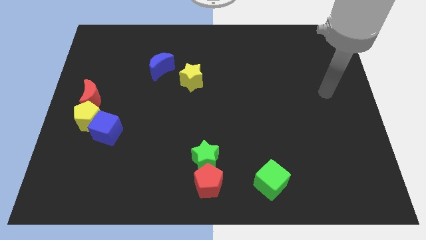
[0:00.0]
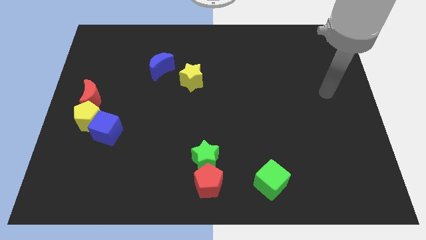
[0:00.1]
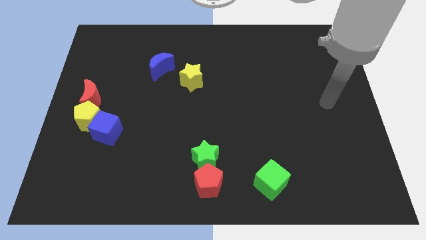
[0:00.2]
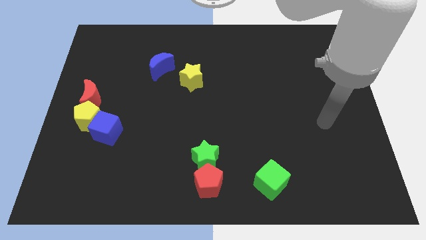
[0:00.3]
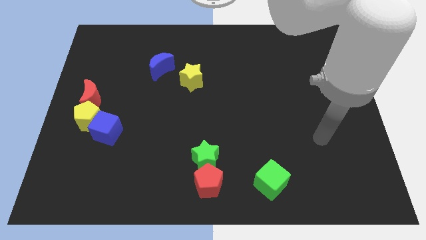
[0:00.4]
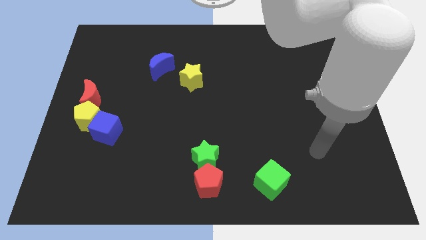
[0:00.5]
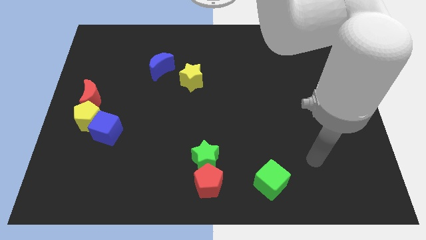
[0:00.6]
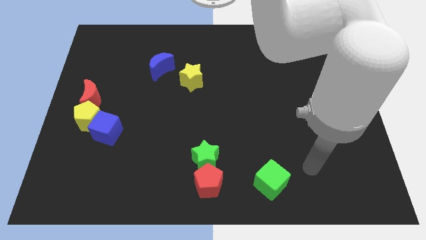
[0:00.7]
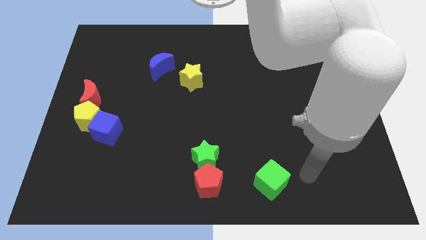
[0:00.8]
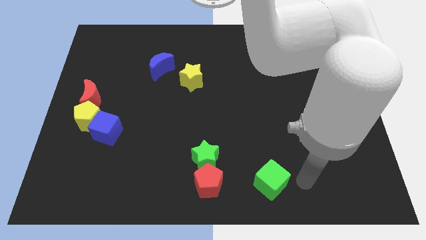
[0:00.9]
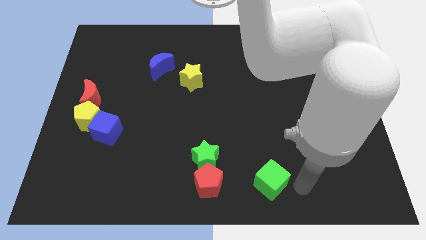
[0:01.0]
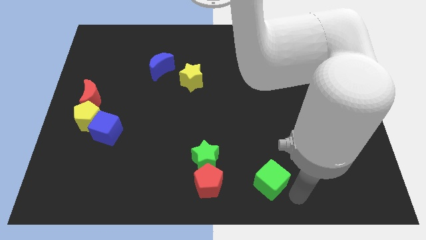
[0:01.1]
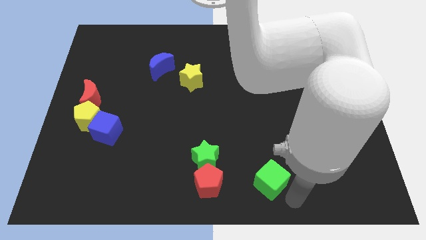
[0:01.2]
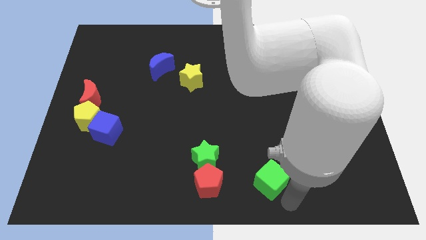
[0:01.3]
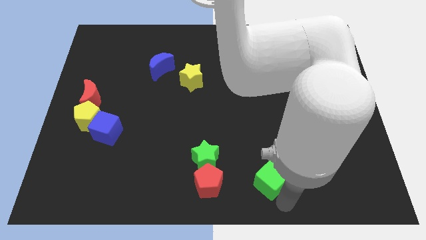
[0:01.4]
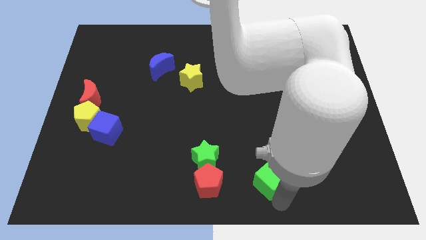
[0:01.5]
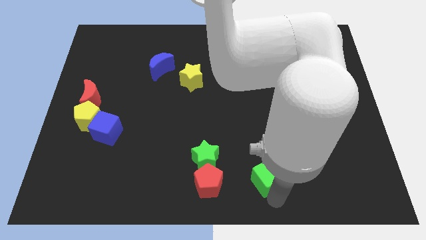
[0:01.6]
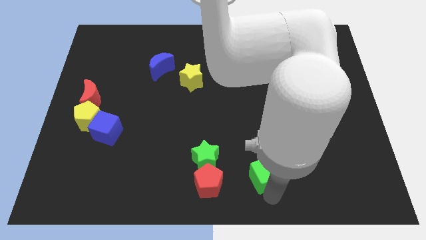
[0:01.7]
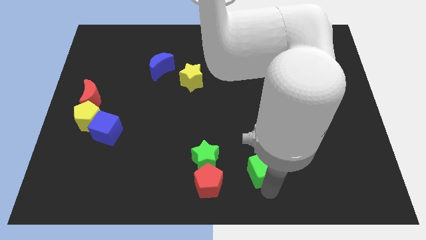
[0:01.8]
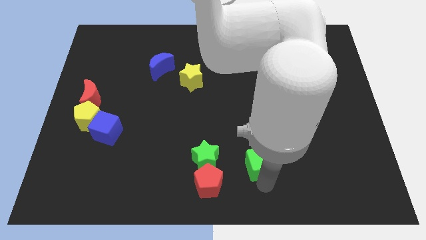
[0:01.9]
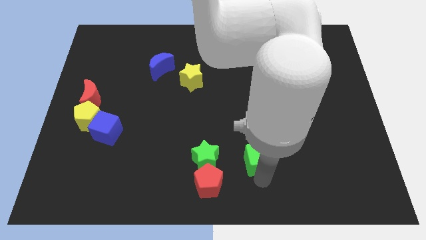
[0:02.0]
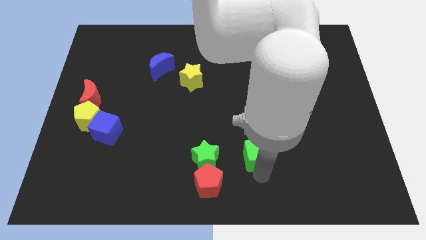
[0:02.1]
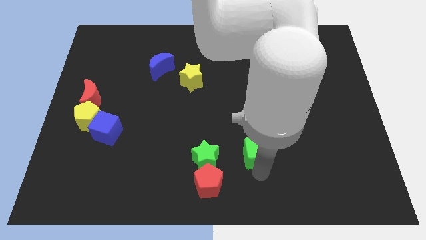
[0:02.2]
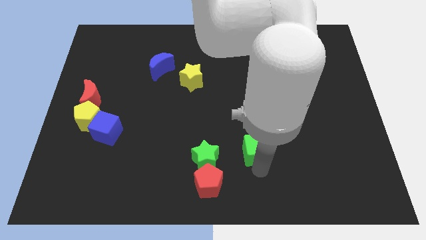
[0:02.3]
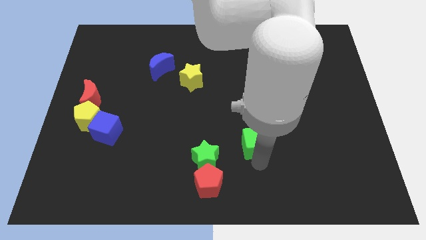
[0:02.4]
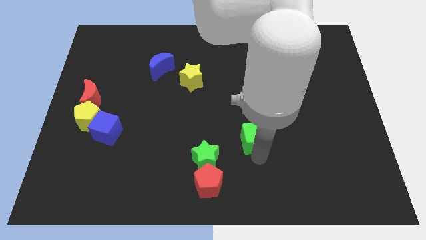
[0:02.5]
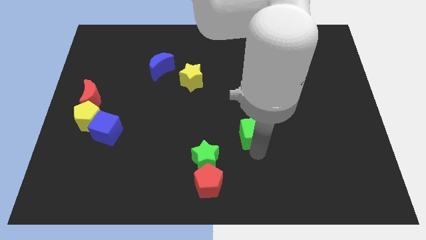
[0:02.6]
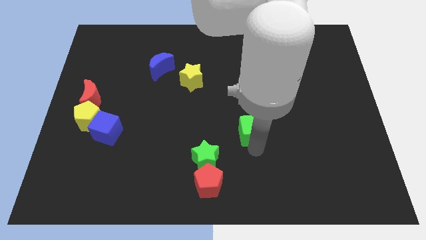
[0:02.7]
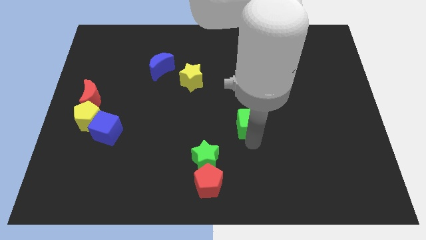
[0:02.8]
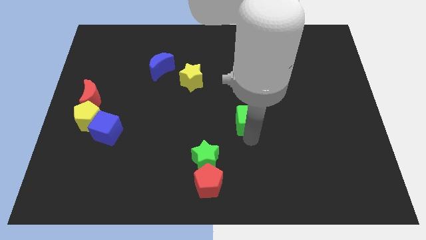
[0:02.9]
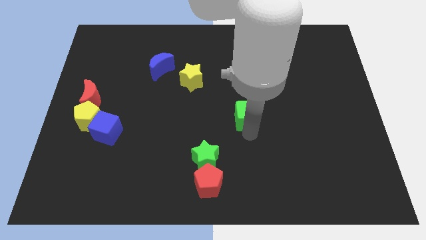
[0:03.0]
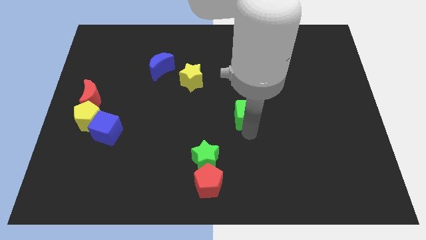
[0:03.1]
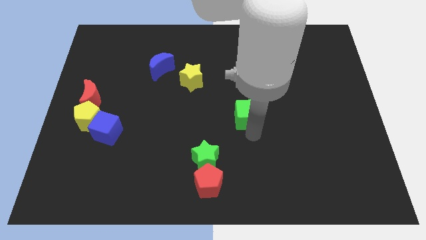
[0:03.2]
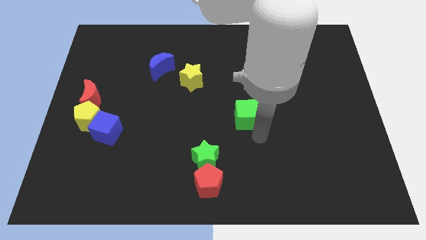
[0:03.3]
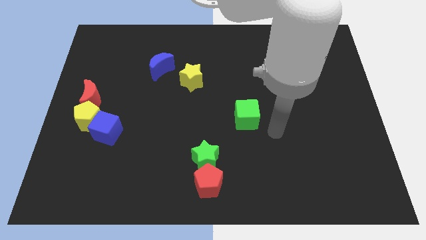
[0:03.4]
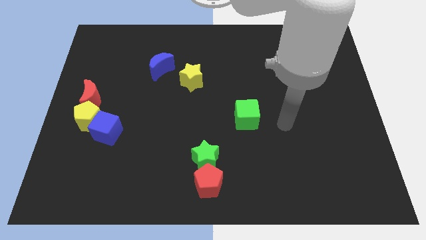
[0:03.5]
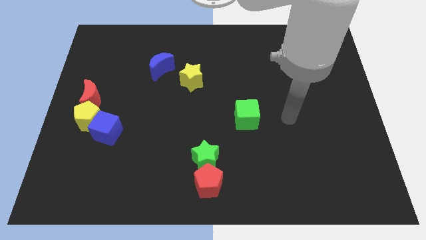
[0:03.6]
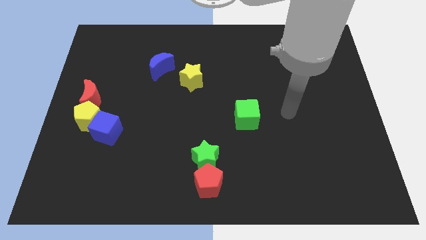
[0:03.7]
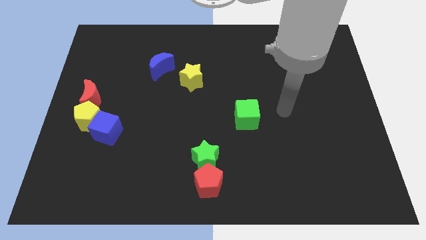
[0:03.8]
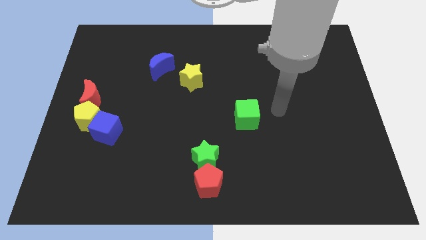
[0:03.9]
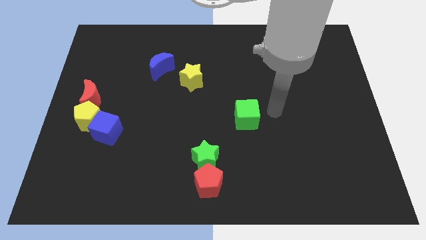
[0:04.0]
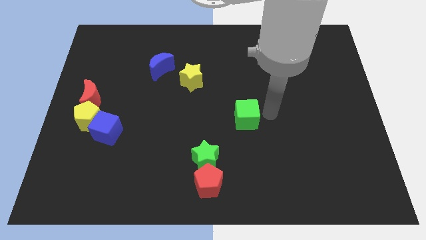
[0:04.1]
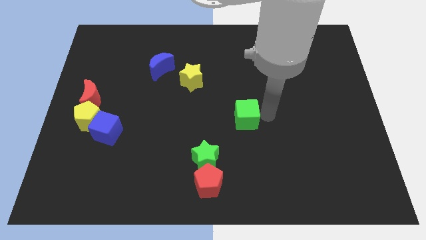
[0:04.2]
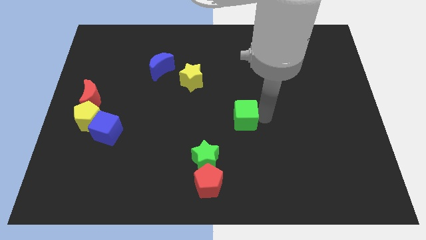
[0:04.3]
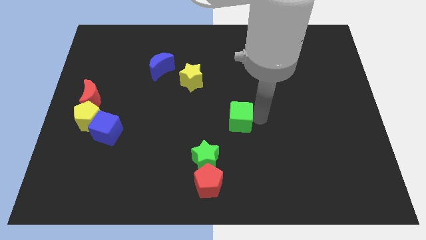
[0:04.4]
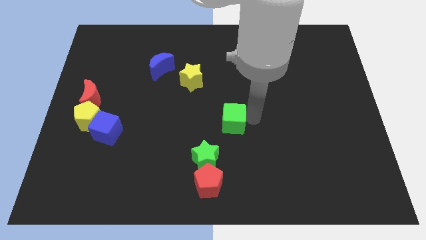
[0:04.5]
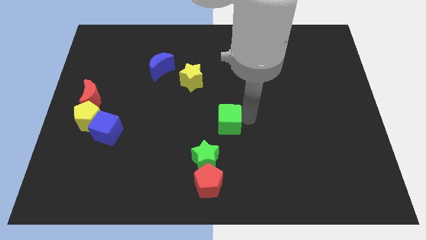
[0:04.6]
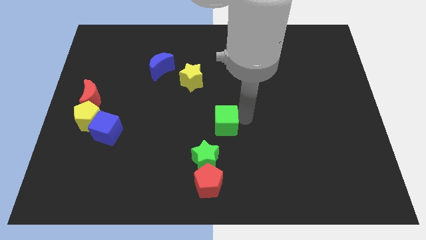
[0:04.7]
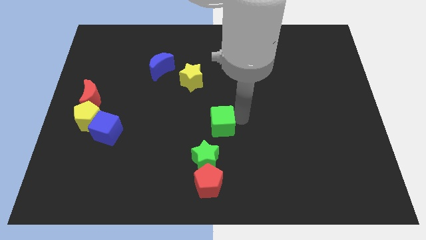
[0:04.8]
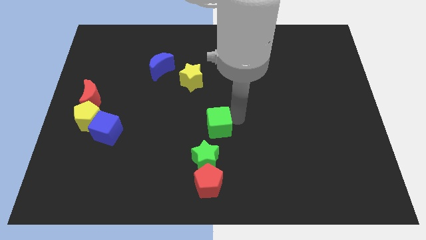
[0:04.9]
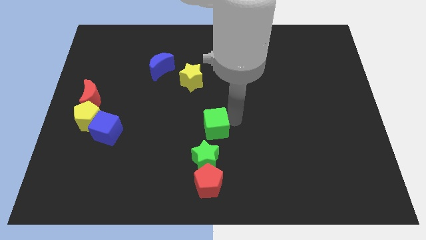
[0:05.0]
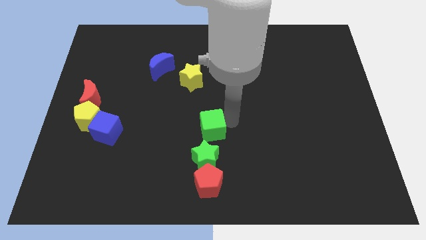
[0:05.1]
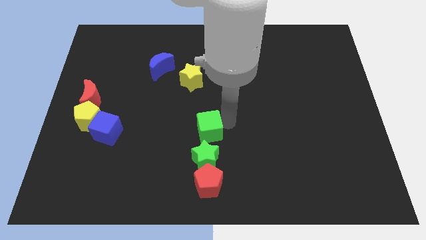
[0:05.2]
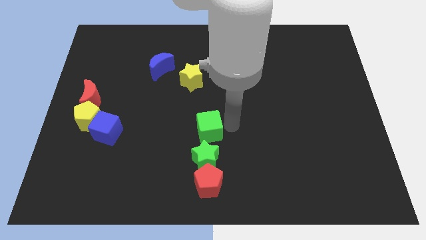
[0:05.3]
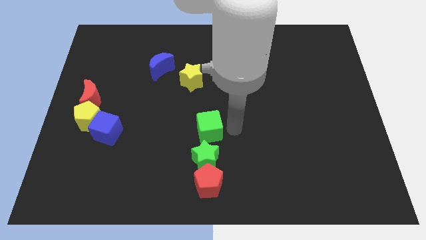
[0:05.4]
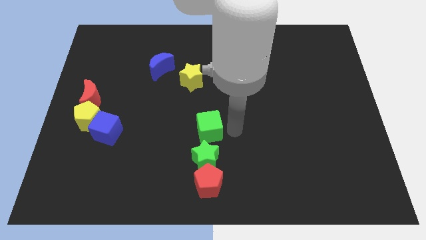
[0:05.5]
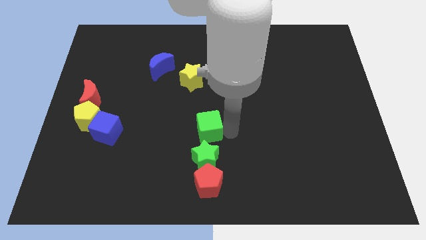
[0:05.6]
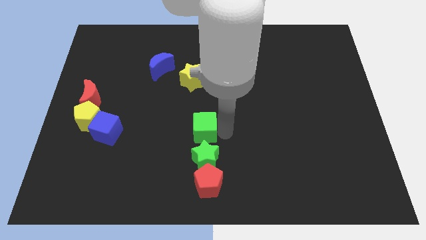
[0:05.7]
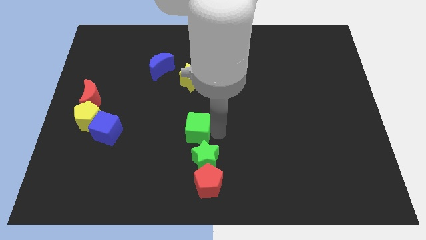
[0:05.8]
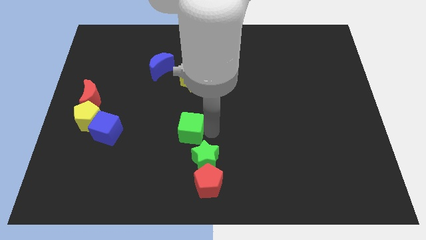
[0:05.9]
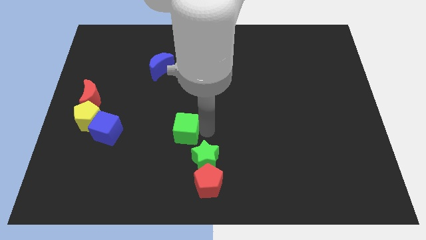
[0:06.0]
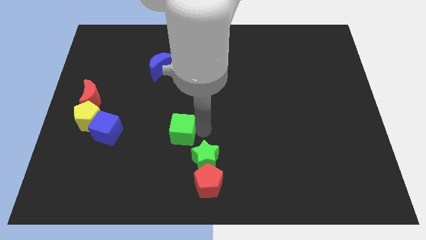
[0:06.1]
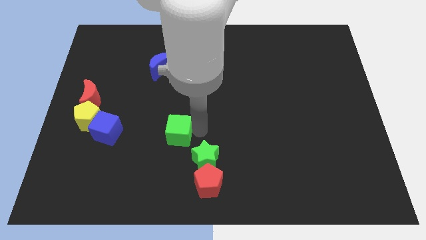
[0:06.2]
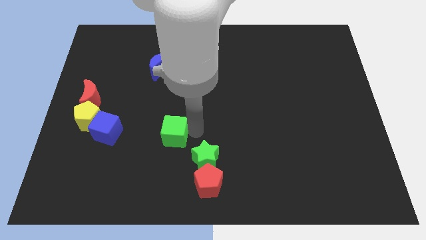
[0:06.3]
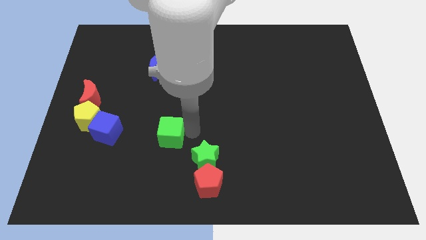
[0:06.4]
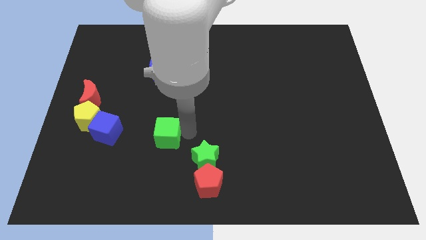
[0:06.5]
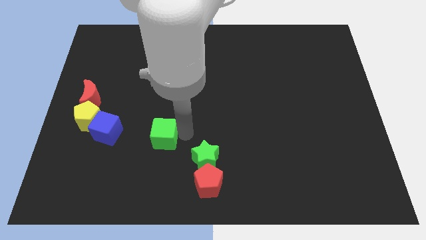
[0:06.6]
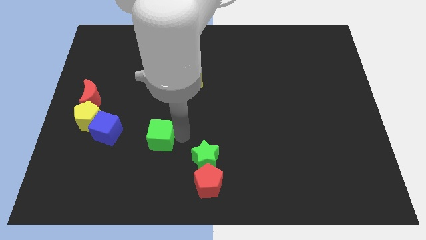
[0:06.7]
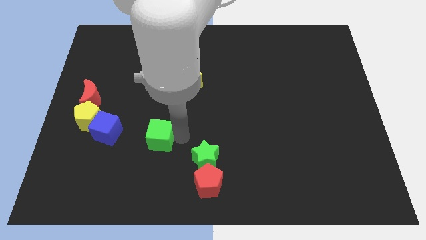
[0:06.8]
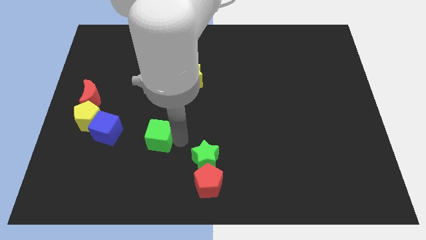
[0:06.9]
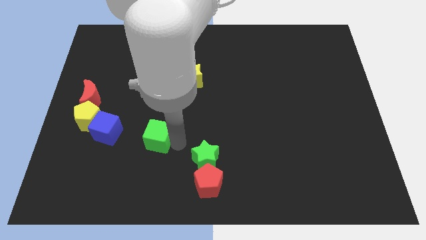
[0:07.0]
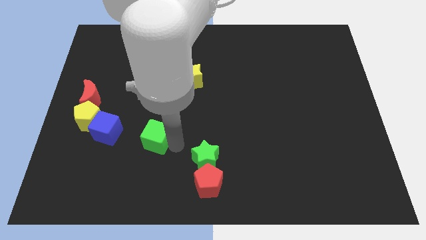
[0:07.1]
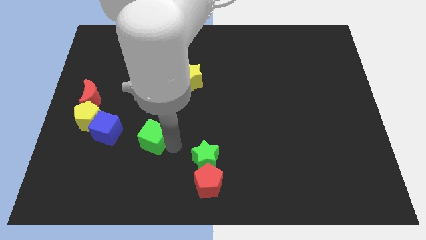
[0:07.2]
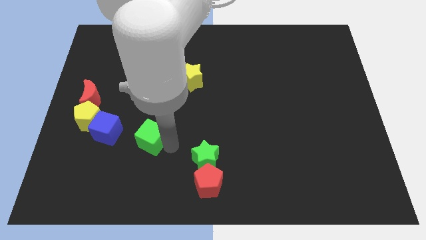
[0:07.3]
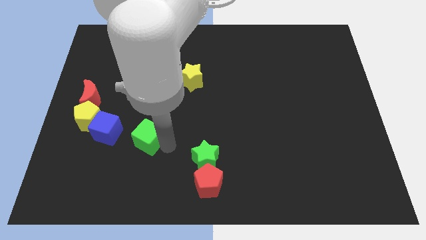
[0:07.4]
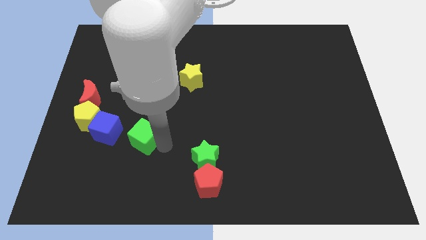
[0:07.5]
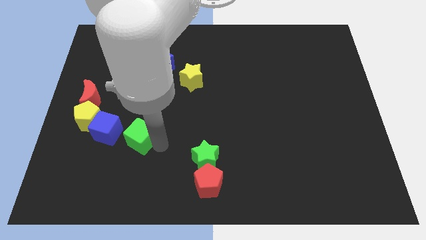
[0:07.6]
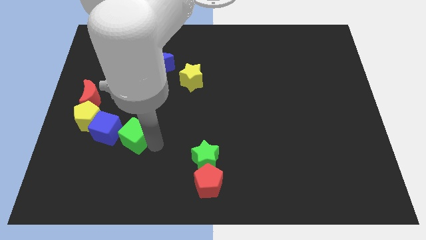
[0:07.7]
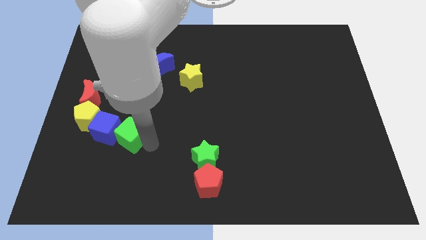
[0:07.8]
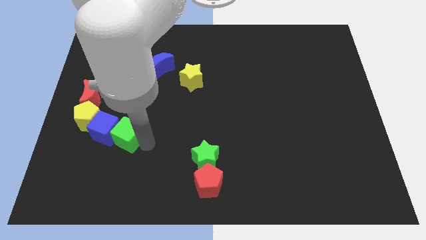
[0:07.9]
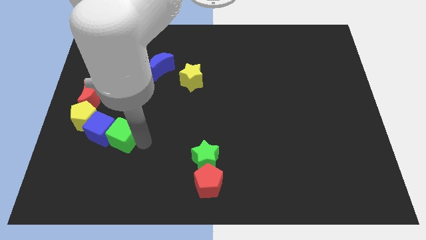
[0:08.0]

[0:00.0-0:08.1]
move the green cube close to the blue cube
